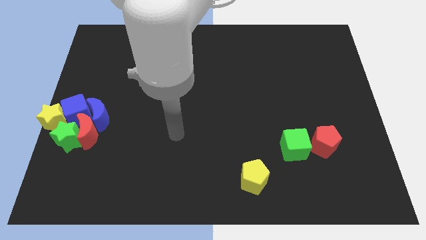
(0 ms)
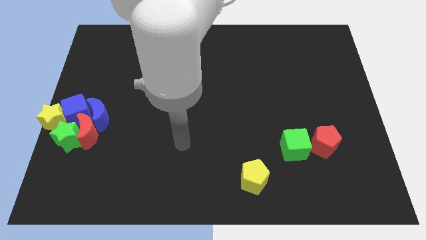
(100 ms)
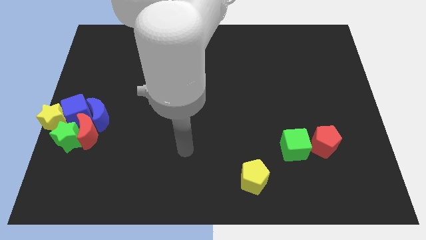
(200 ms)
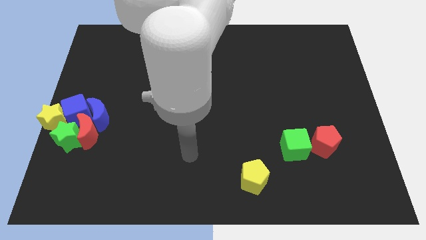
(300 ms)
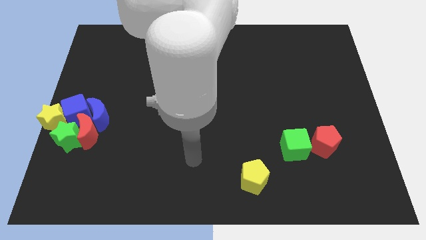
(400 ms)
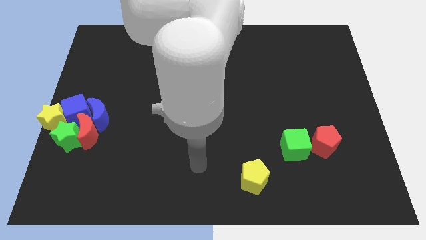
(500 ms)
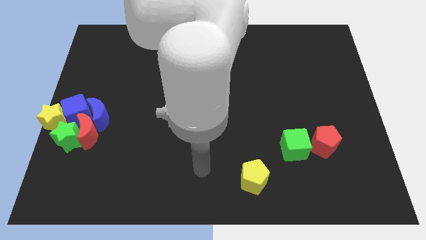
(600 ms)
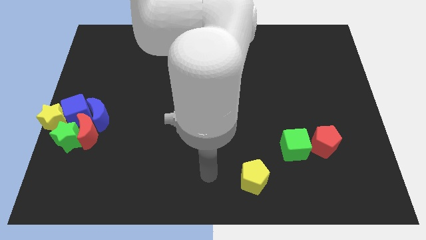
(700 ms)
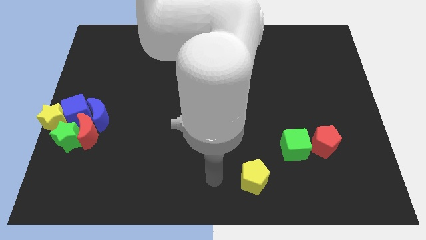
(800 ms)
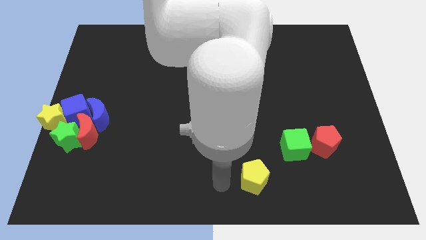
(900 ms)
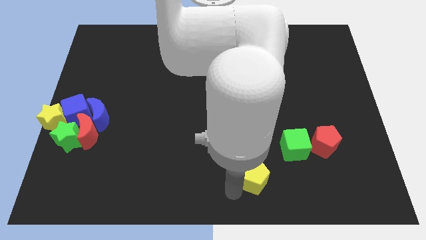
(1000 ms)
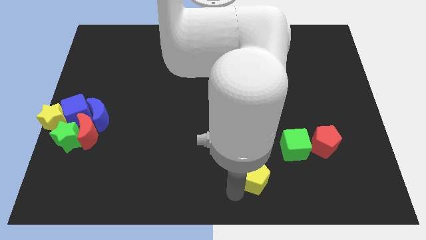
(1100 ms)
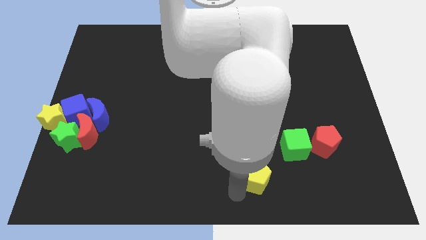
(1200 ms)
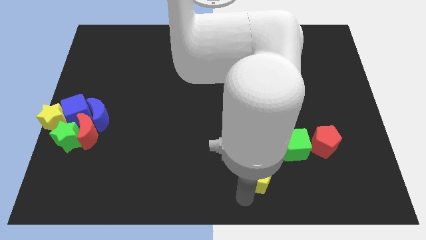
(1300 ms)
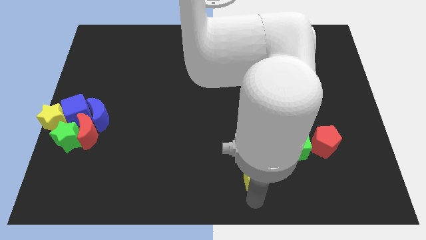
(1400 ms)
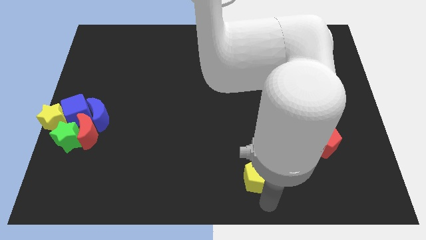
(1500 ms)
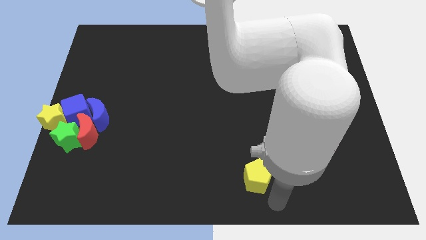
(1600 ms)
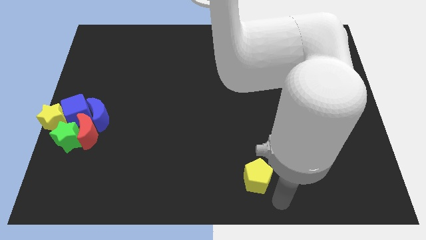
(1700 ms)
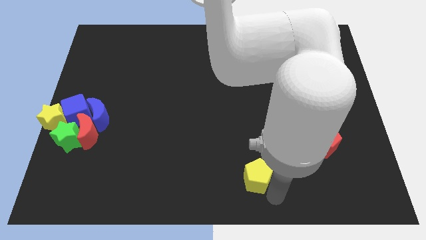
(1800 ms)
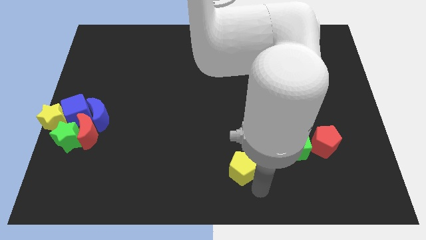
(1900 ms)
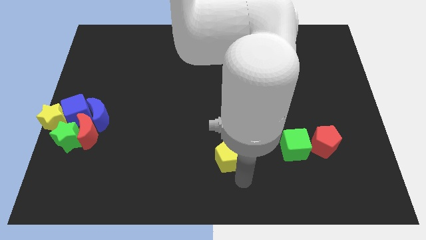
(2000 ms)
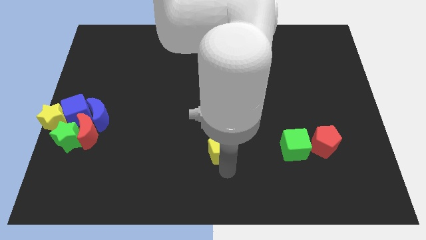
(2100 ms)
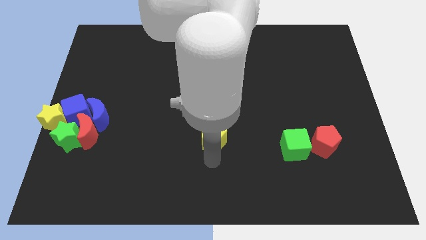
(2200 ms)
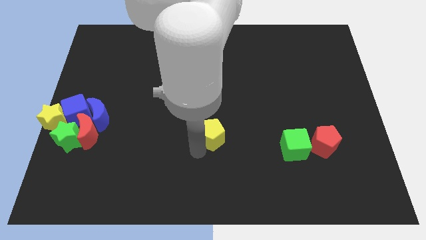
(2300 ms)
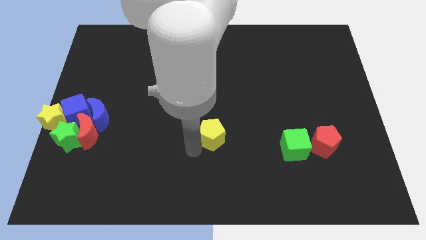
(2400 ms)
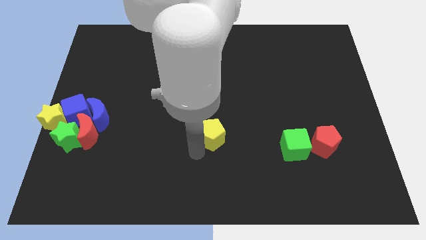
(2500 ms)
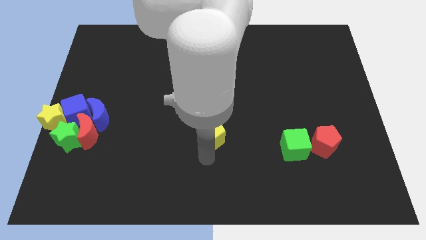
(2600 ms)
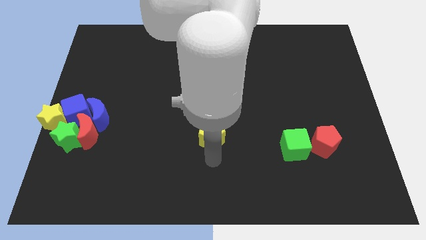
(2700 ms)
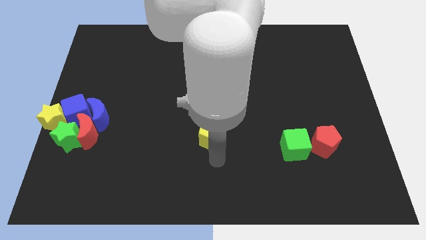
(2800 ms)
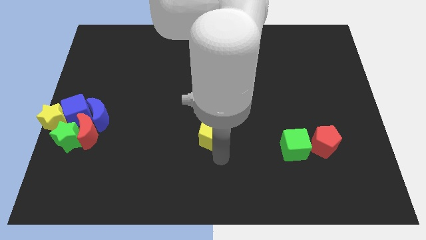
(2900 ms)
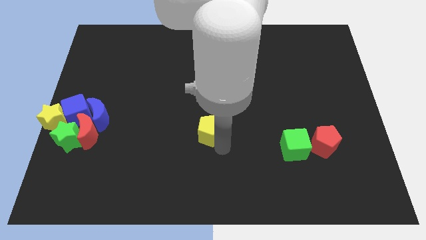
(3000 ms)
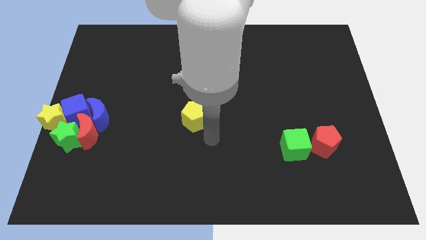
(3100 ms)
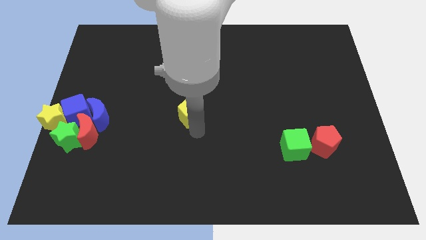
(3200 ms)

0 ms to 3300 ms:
place yellow pentagon at center

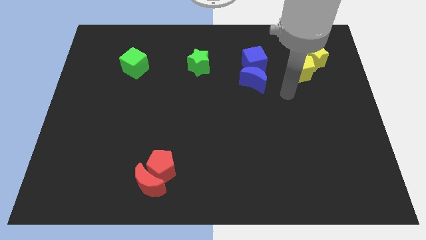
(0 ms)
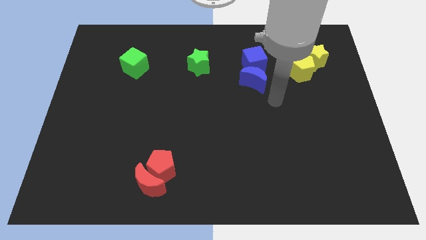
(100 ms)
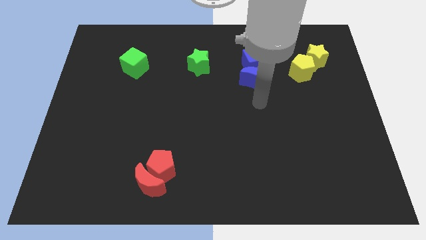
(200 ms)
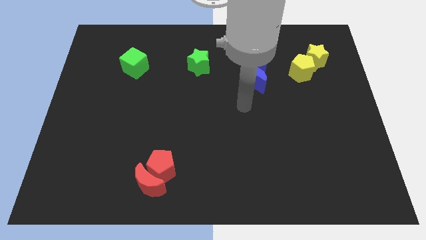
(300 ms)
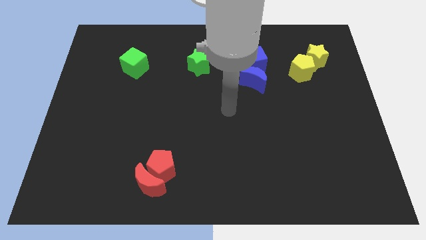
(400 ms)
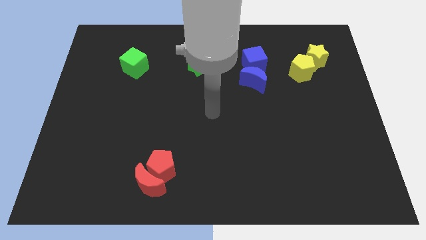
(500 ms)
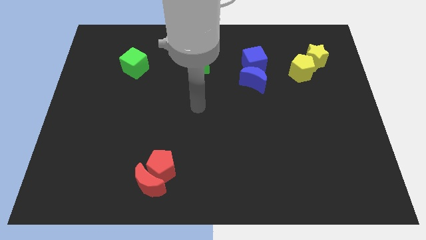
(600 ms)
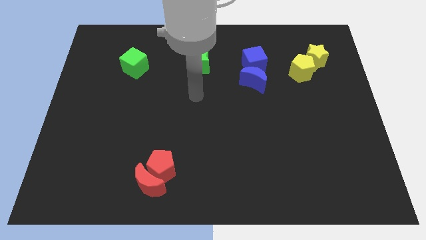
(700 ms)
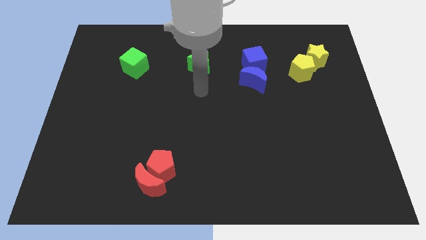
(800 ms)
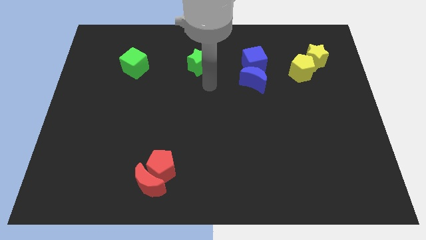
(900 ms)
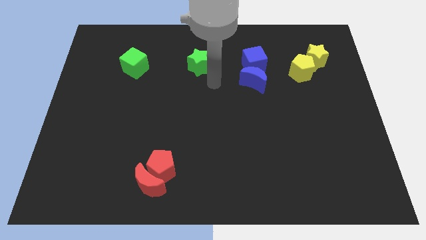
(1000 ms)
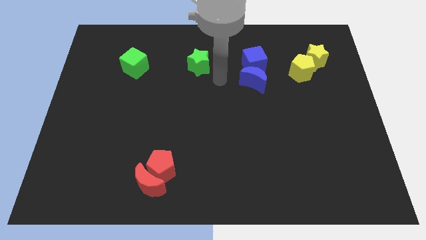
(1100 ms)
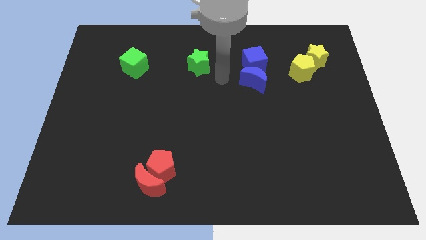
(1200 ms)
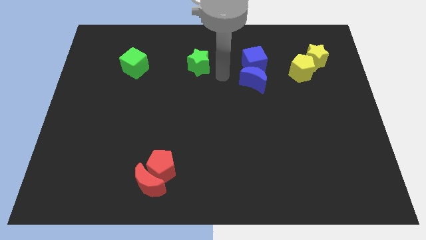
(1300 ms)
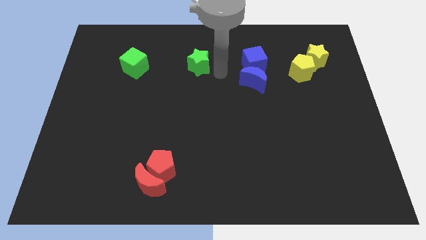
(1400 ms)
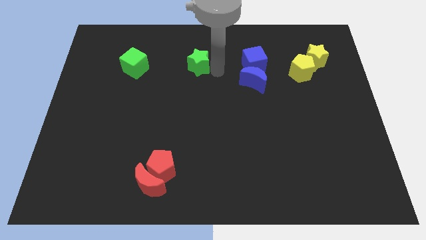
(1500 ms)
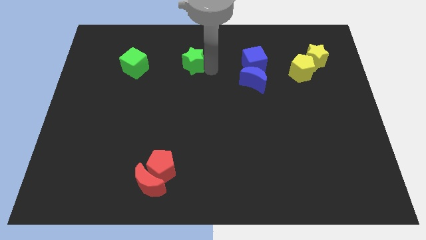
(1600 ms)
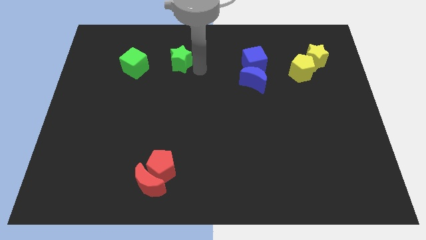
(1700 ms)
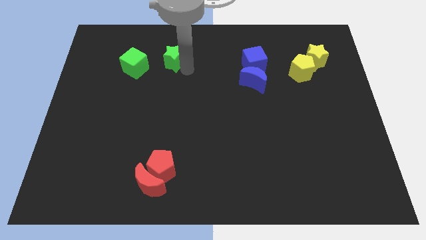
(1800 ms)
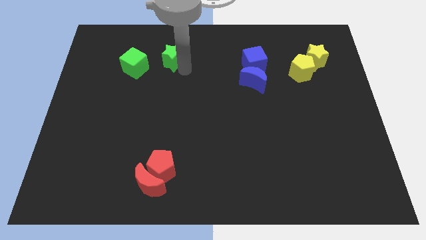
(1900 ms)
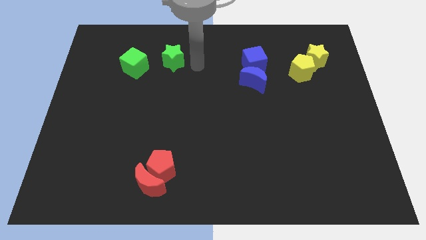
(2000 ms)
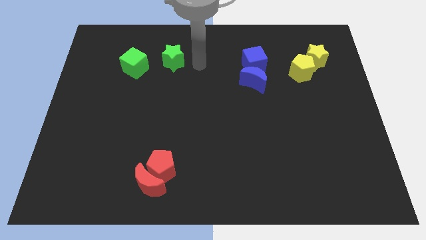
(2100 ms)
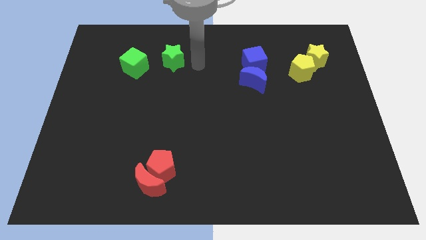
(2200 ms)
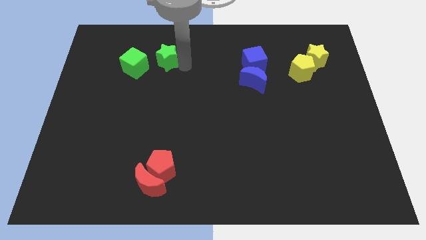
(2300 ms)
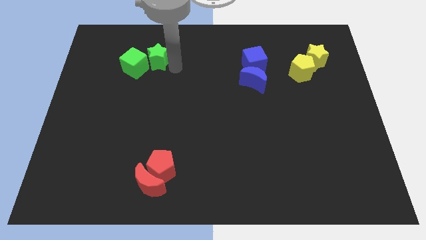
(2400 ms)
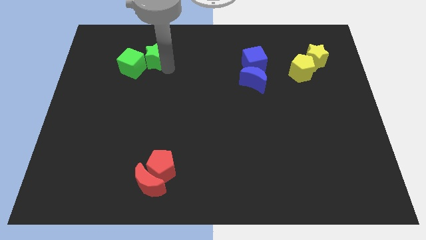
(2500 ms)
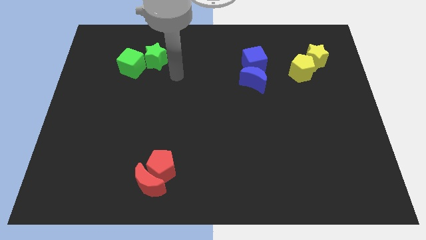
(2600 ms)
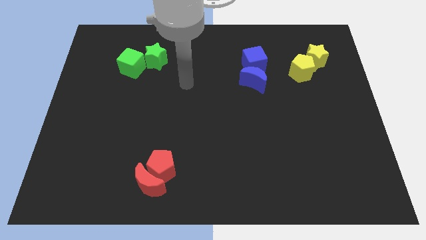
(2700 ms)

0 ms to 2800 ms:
move green star into the green cube

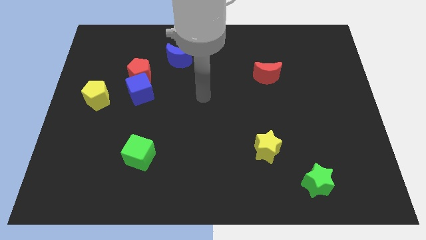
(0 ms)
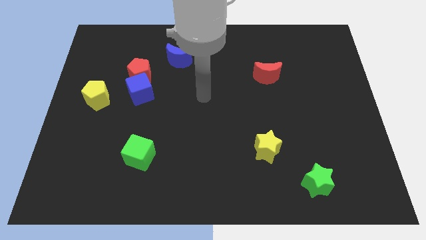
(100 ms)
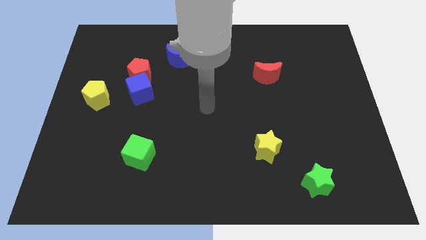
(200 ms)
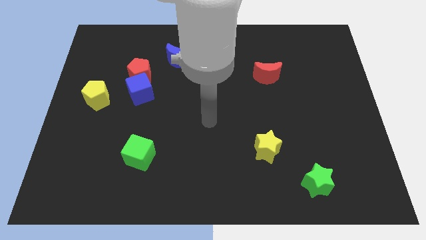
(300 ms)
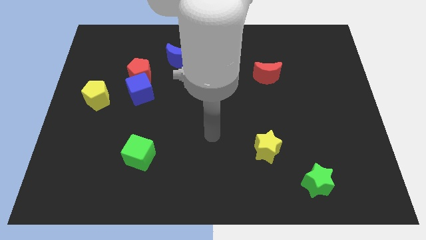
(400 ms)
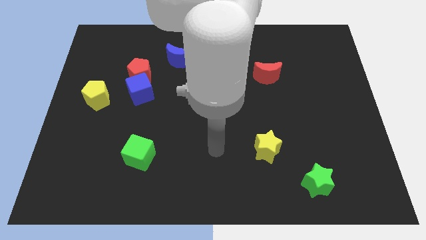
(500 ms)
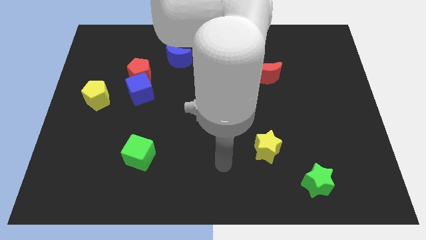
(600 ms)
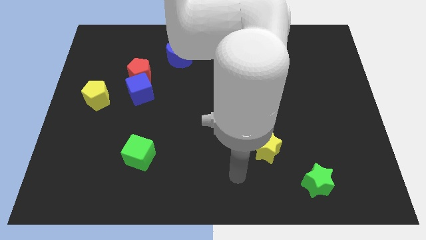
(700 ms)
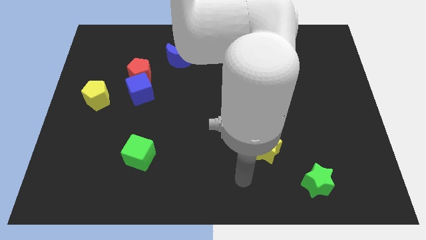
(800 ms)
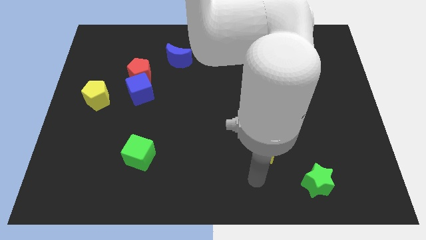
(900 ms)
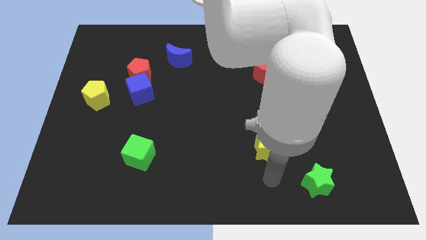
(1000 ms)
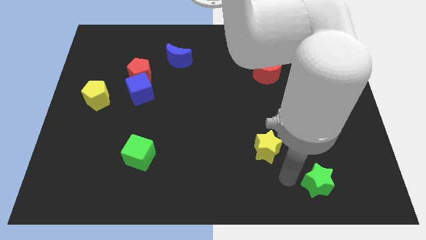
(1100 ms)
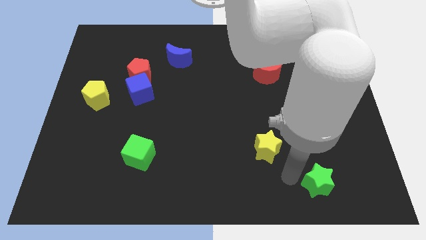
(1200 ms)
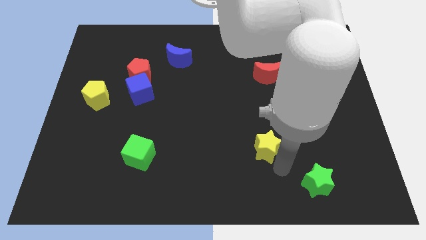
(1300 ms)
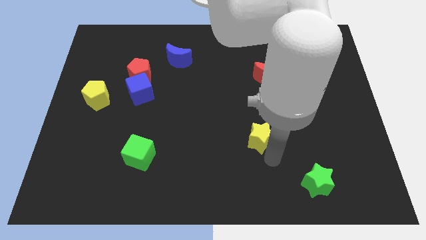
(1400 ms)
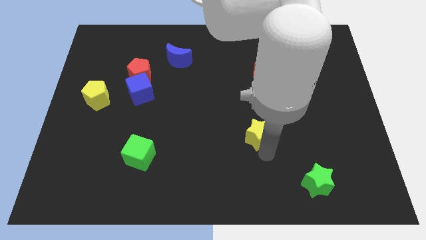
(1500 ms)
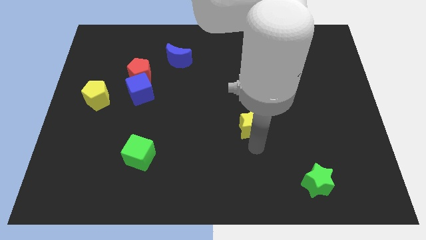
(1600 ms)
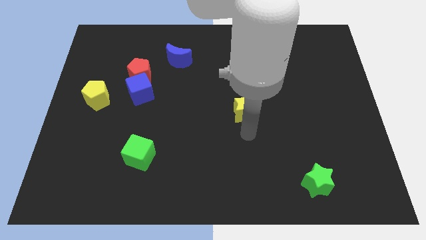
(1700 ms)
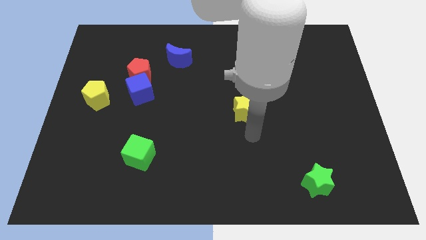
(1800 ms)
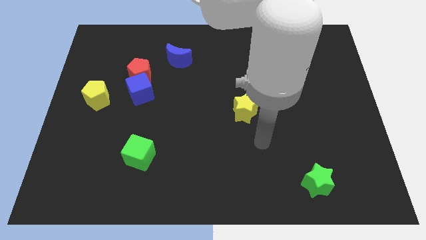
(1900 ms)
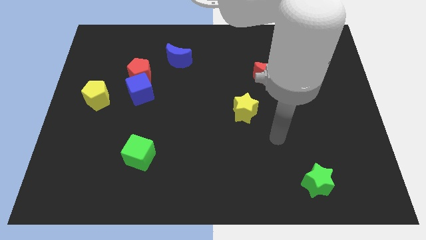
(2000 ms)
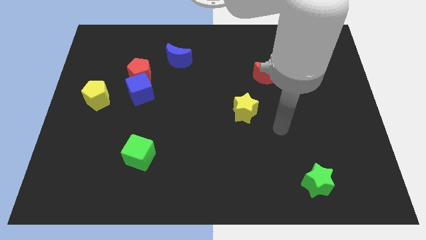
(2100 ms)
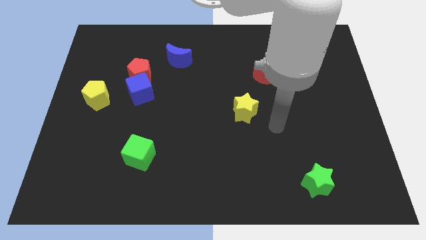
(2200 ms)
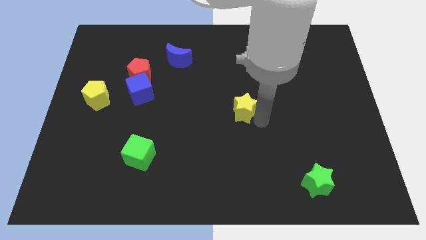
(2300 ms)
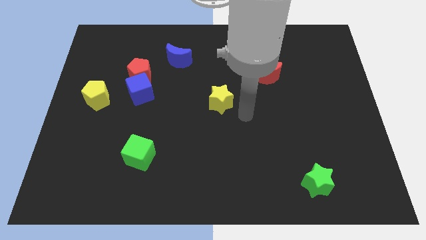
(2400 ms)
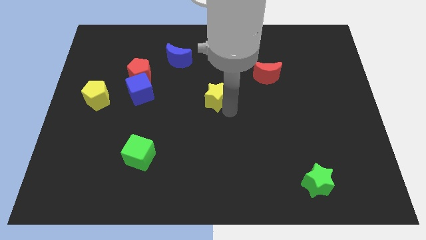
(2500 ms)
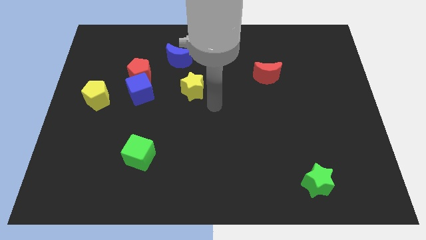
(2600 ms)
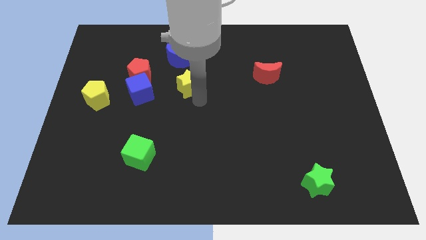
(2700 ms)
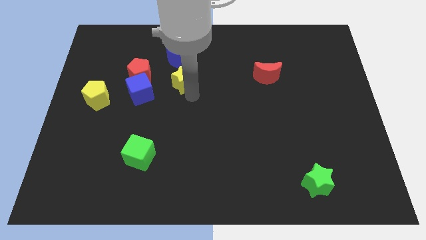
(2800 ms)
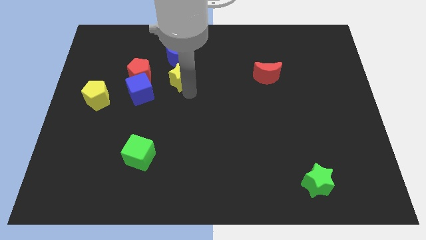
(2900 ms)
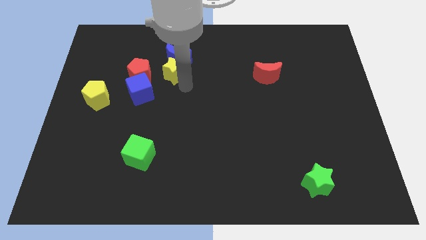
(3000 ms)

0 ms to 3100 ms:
move the yellow star to the bottom of the blue crescent
